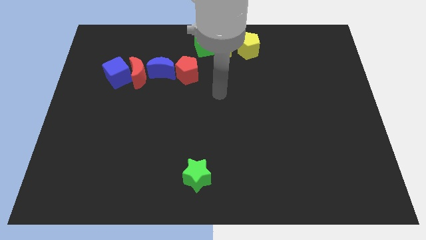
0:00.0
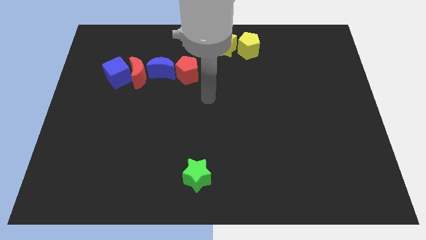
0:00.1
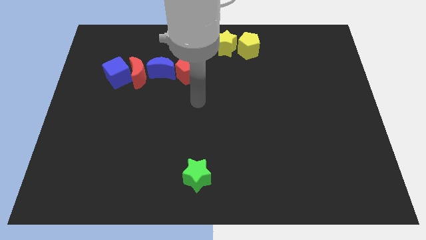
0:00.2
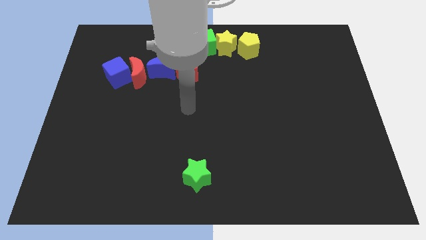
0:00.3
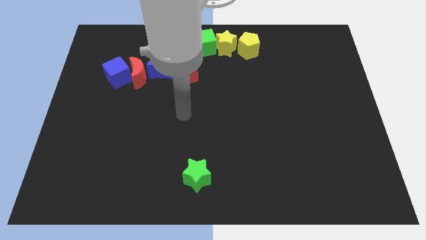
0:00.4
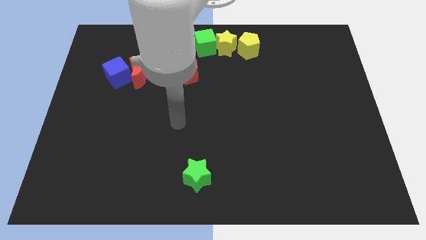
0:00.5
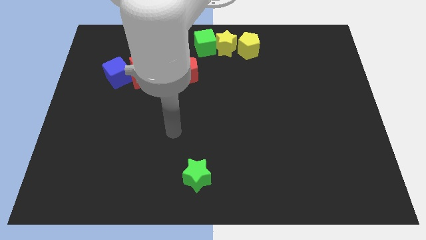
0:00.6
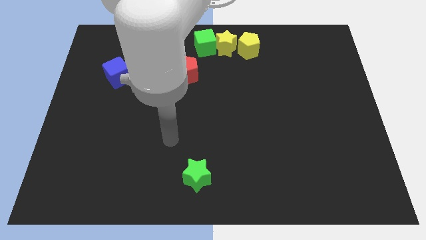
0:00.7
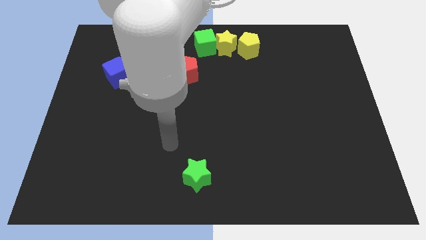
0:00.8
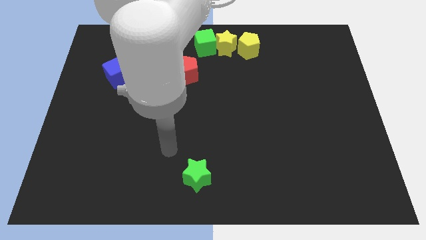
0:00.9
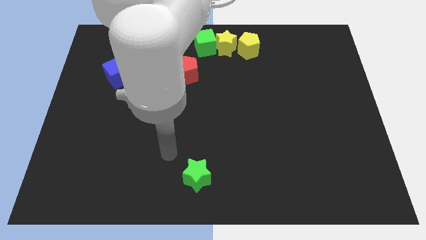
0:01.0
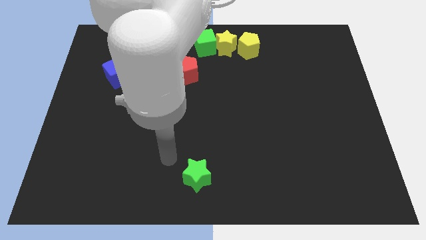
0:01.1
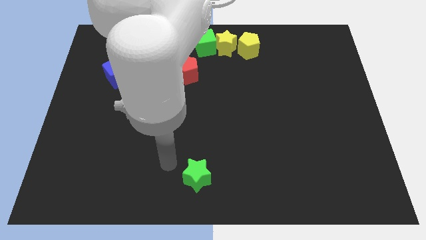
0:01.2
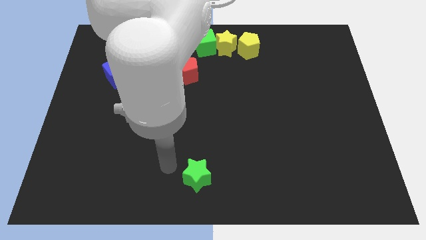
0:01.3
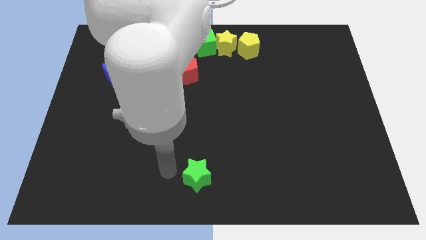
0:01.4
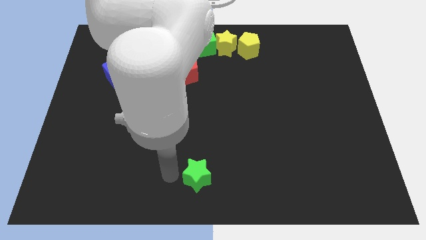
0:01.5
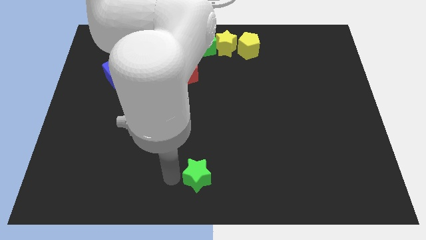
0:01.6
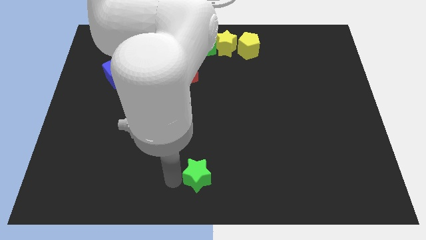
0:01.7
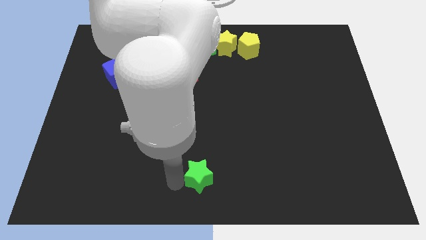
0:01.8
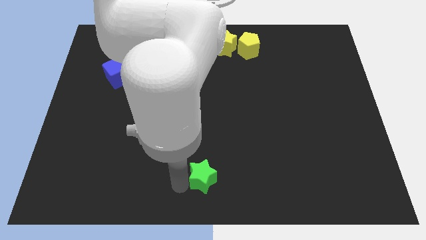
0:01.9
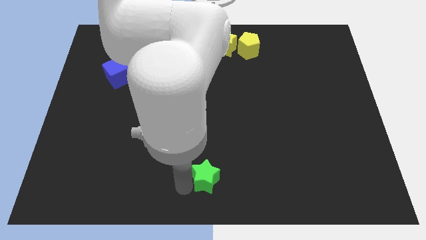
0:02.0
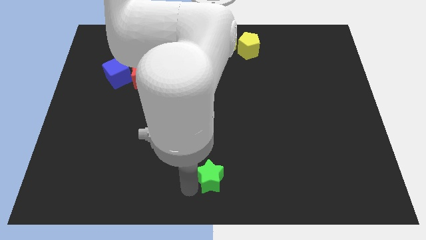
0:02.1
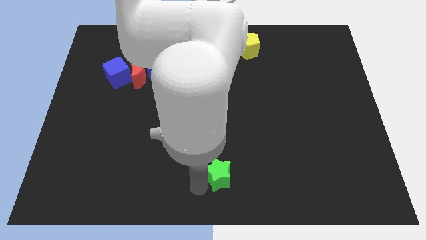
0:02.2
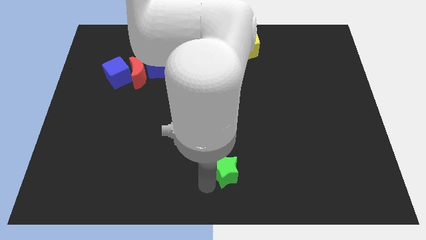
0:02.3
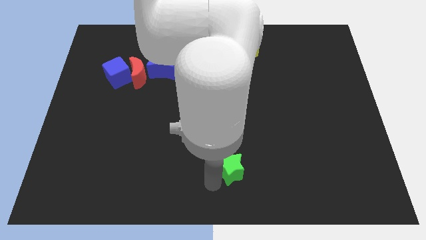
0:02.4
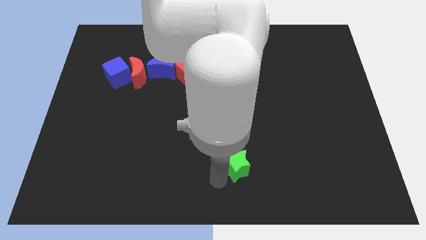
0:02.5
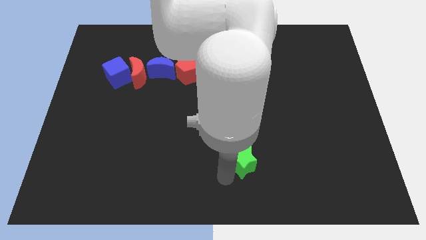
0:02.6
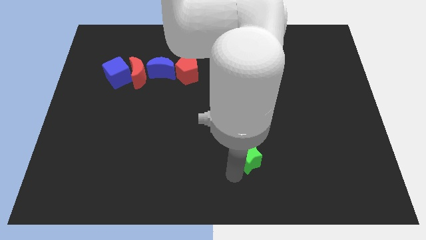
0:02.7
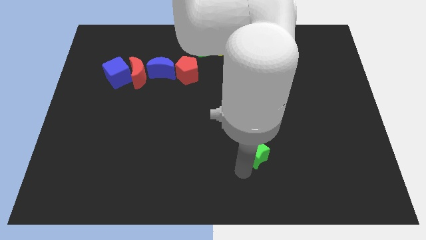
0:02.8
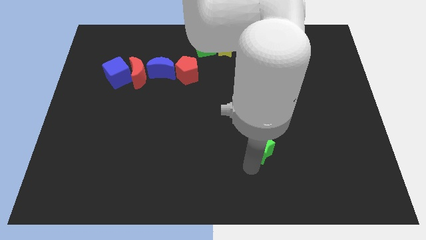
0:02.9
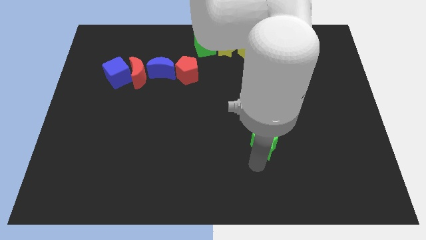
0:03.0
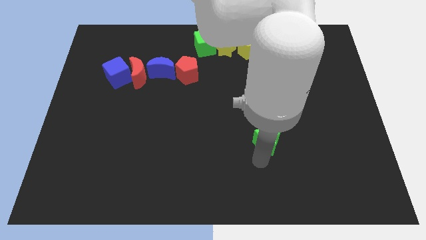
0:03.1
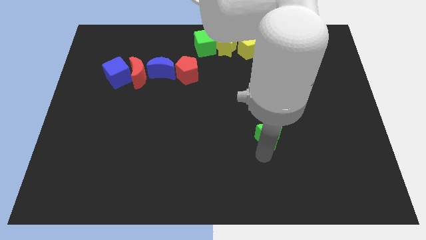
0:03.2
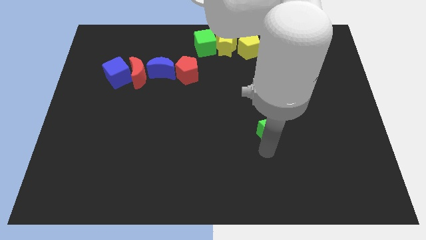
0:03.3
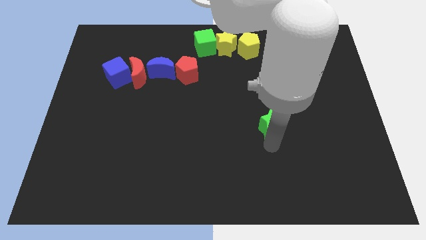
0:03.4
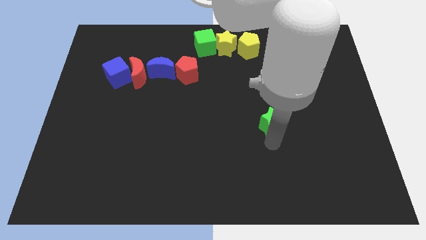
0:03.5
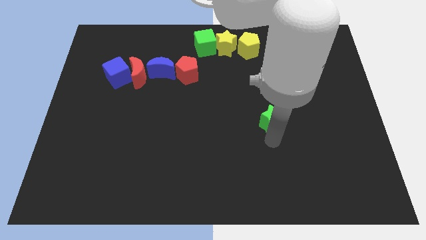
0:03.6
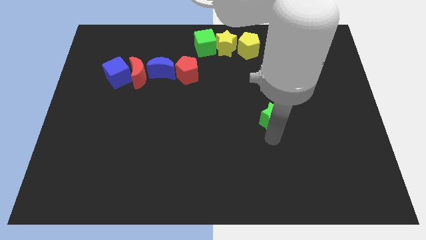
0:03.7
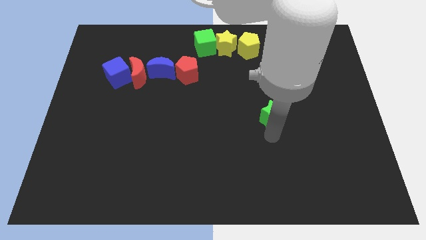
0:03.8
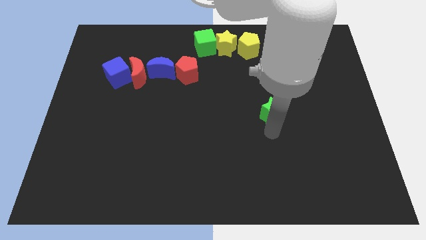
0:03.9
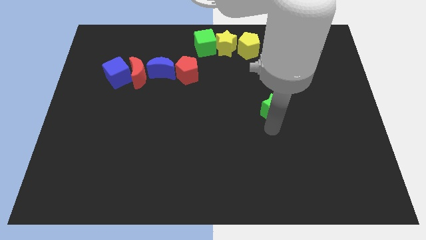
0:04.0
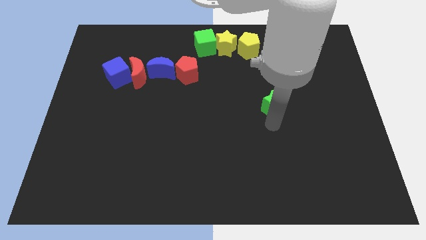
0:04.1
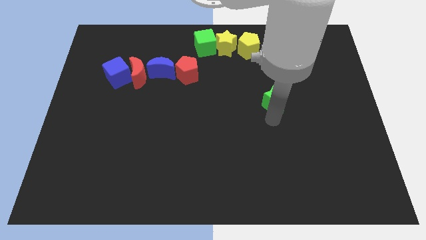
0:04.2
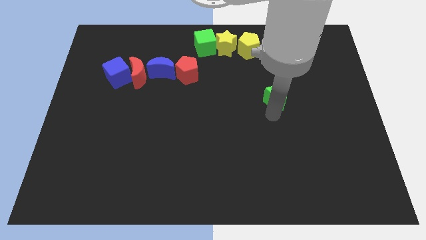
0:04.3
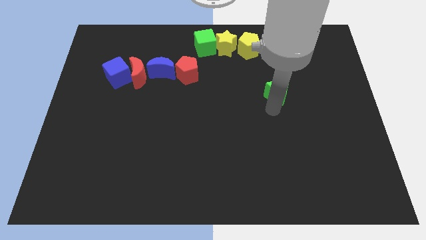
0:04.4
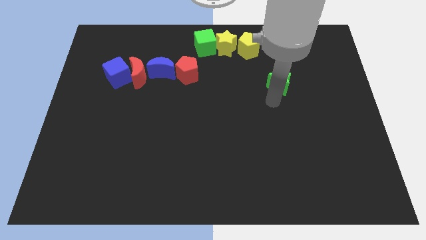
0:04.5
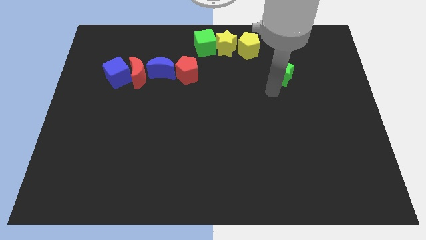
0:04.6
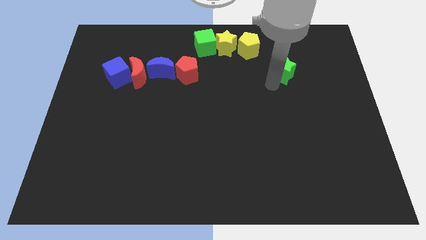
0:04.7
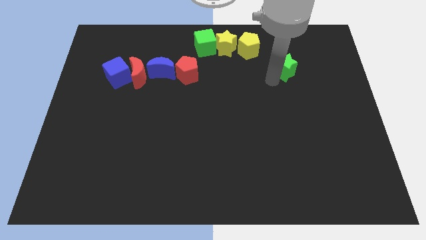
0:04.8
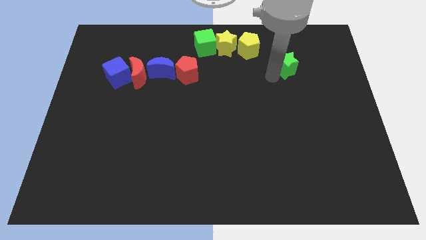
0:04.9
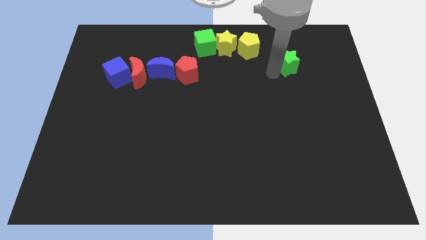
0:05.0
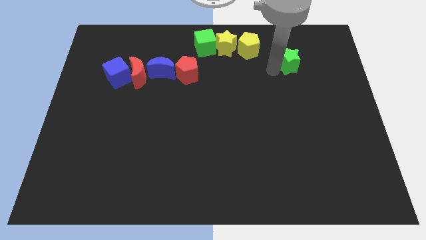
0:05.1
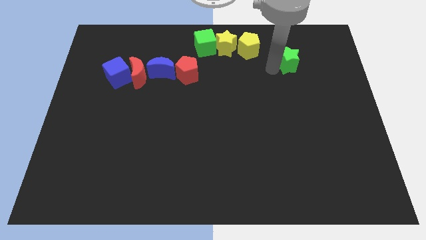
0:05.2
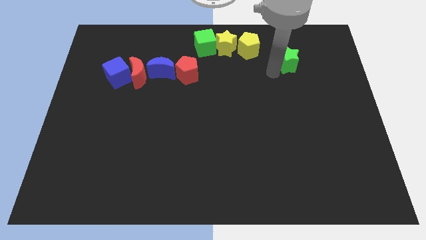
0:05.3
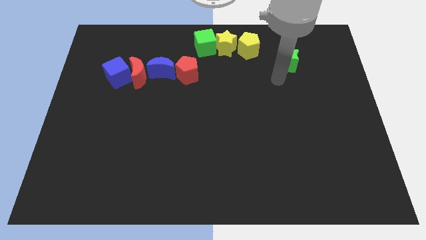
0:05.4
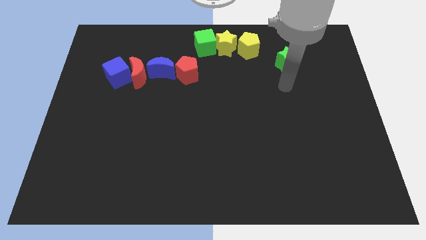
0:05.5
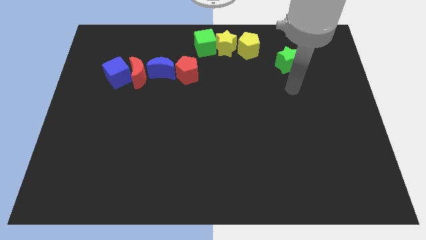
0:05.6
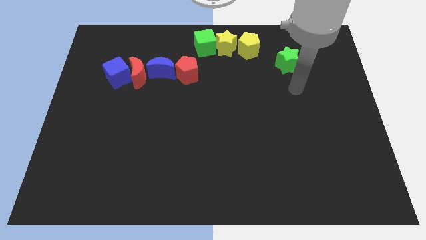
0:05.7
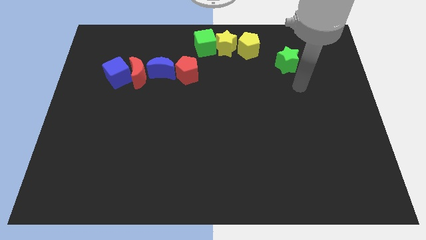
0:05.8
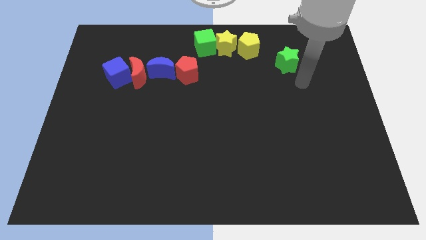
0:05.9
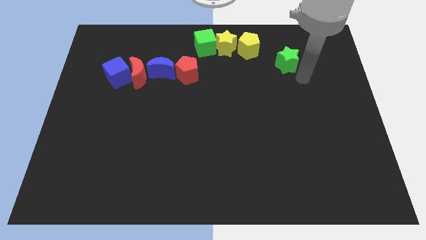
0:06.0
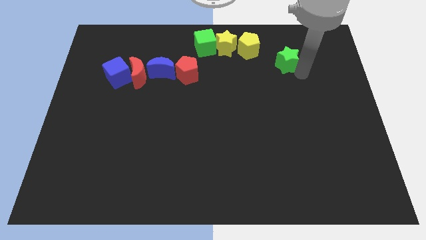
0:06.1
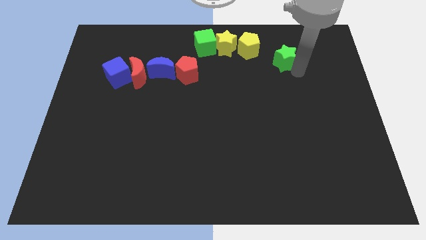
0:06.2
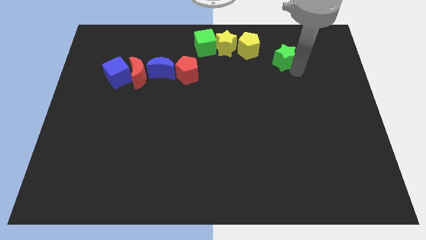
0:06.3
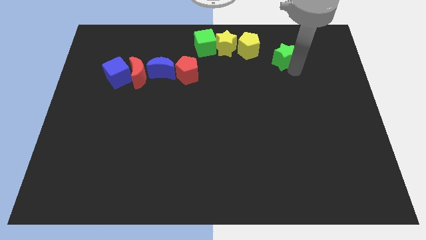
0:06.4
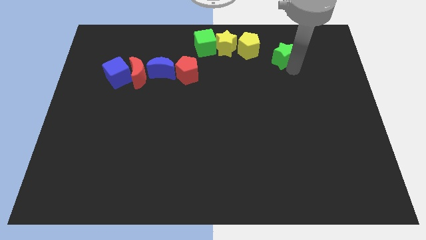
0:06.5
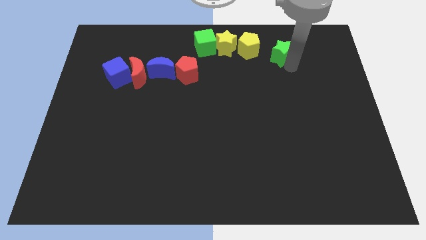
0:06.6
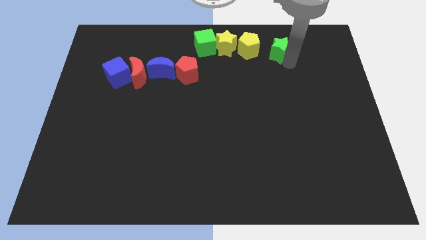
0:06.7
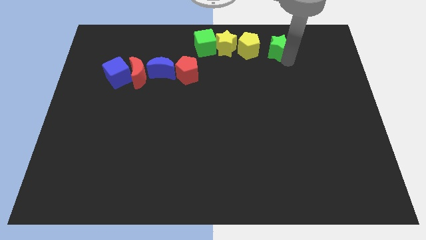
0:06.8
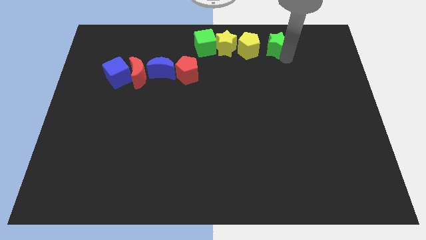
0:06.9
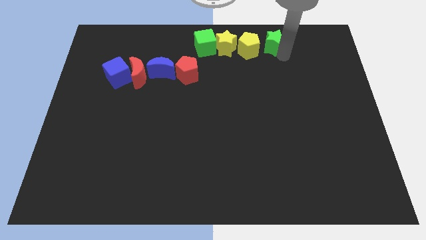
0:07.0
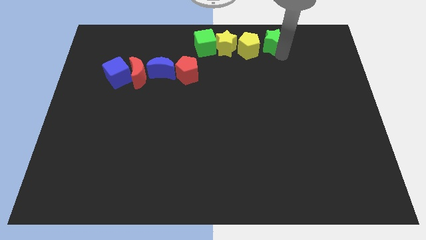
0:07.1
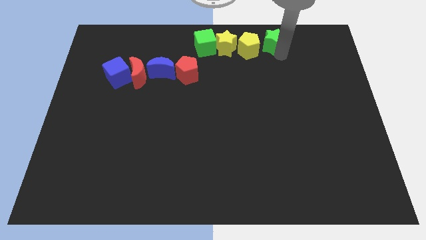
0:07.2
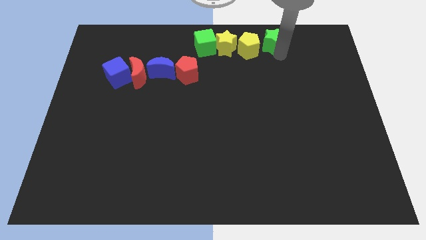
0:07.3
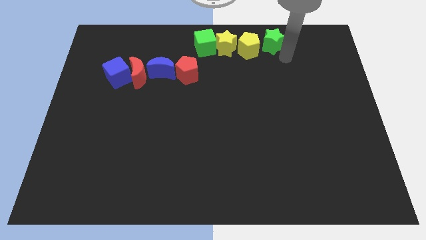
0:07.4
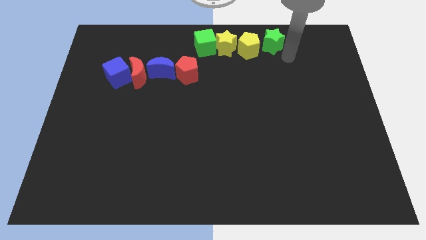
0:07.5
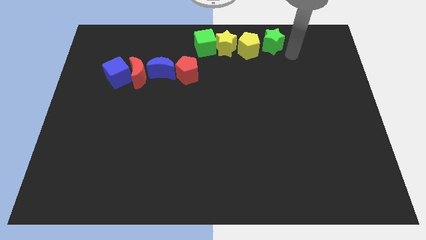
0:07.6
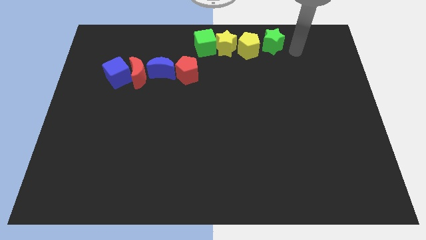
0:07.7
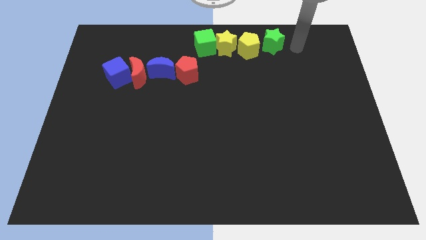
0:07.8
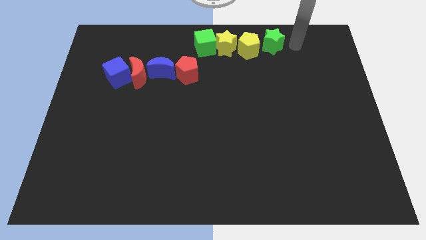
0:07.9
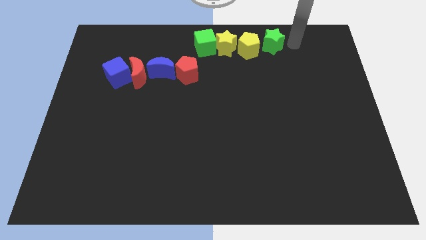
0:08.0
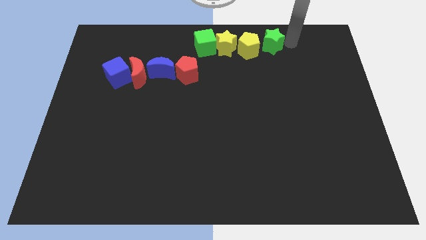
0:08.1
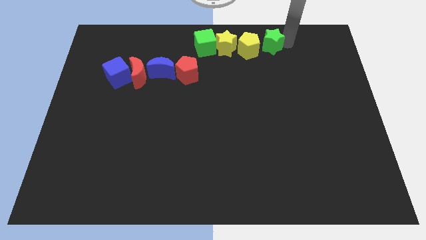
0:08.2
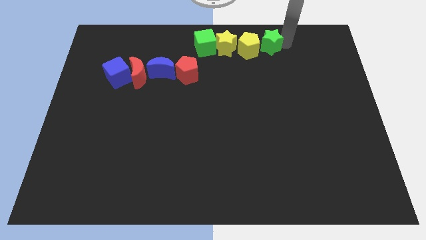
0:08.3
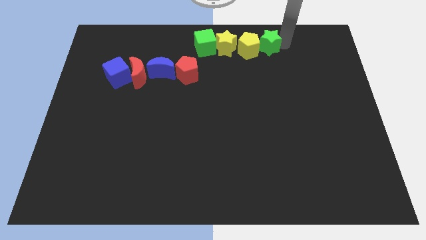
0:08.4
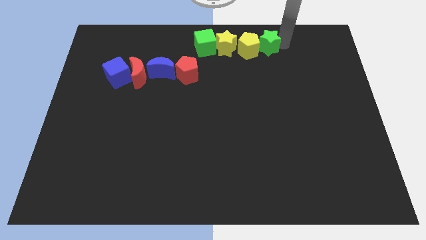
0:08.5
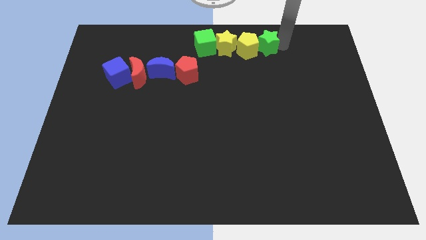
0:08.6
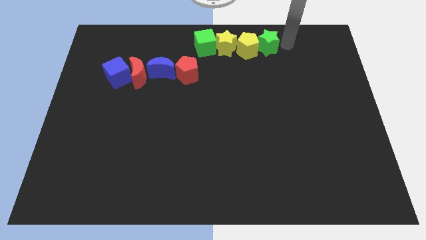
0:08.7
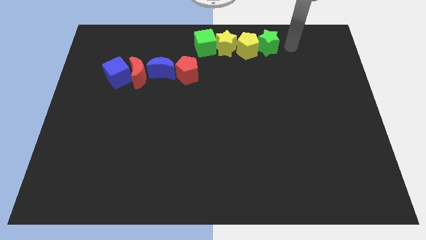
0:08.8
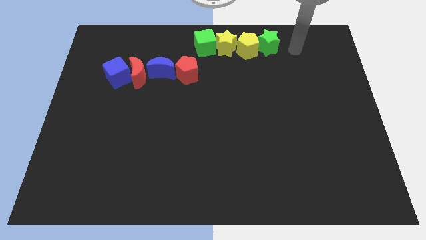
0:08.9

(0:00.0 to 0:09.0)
move the green star to the right of yellow pentagon
